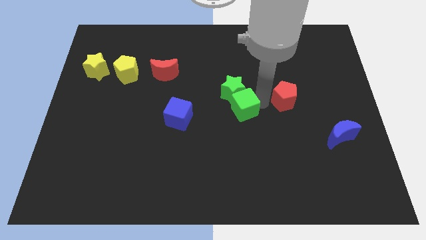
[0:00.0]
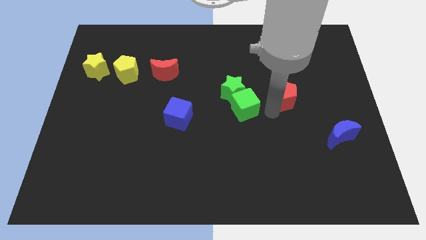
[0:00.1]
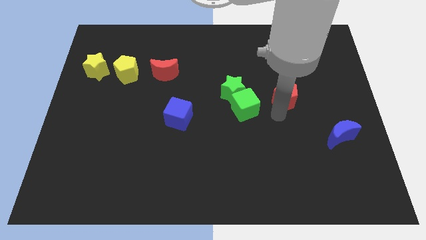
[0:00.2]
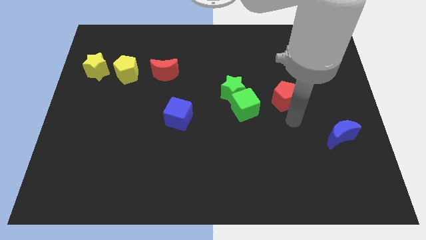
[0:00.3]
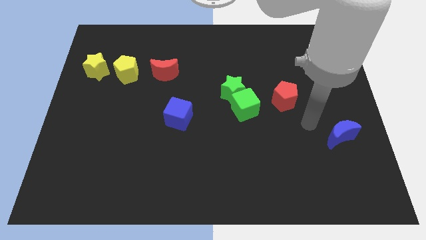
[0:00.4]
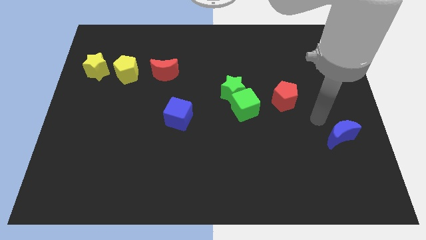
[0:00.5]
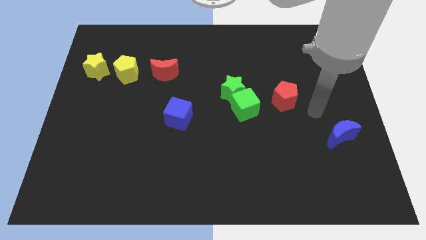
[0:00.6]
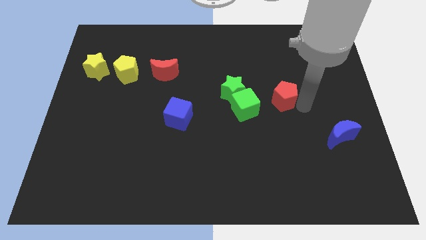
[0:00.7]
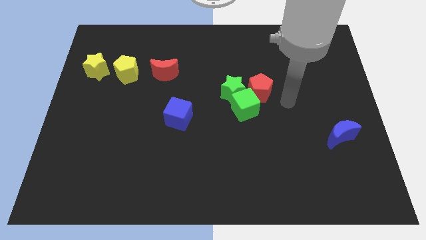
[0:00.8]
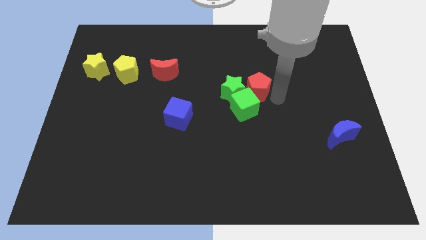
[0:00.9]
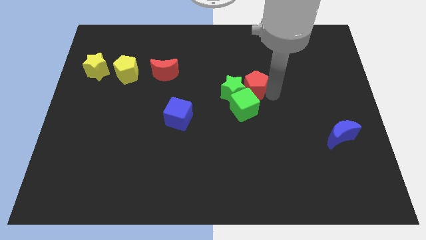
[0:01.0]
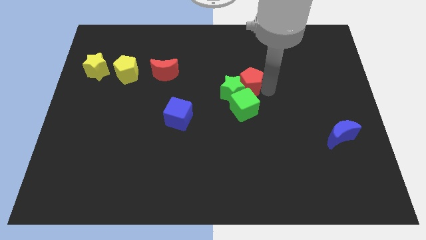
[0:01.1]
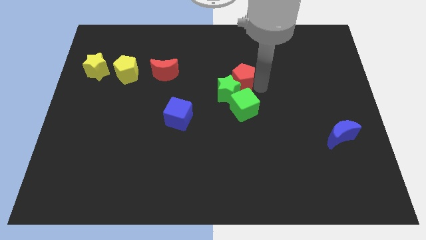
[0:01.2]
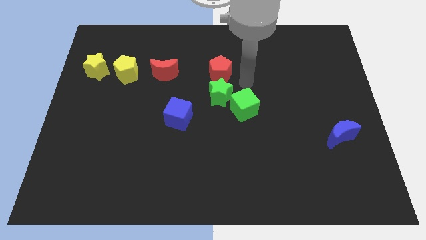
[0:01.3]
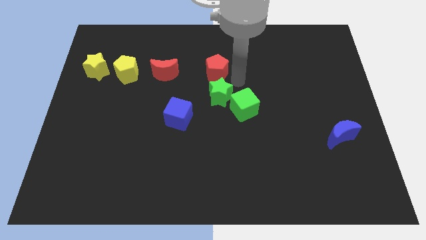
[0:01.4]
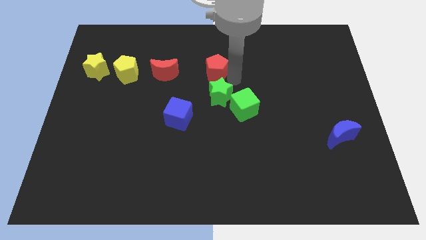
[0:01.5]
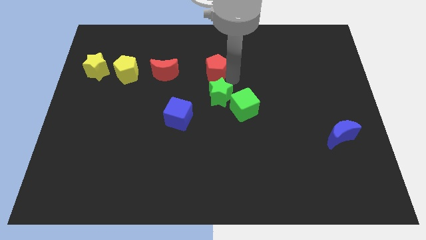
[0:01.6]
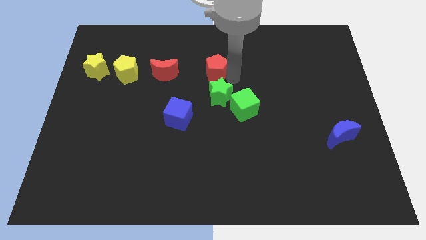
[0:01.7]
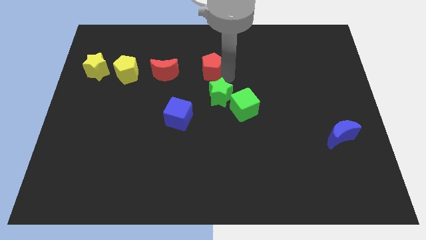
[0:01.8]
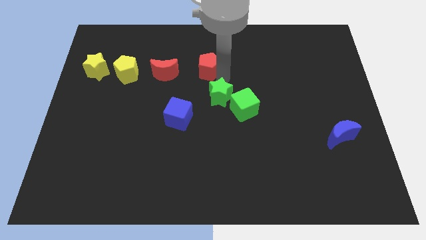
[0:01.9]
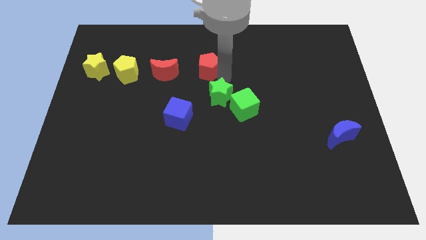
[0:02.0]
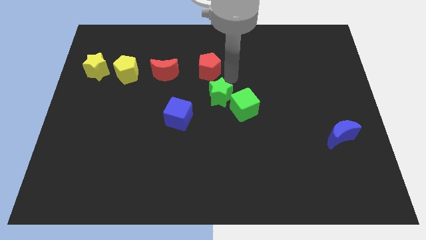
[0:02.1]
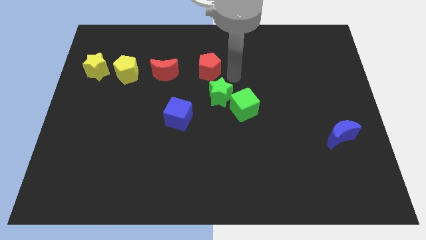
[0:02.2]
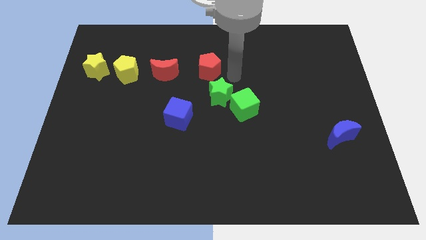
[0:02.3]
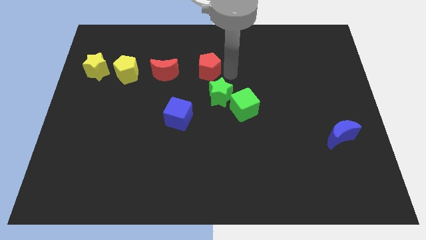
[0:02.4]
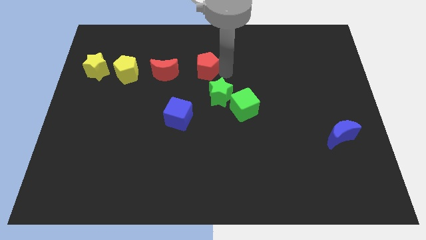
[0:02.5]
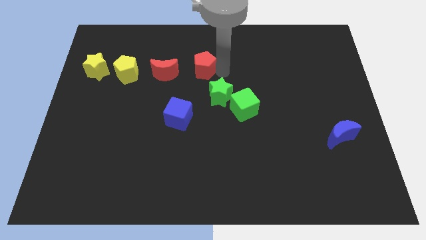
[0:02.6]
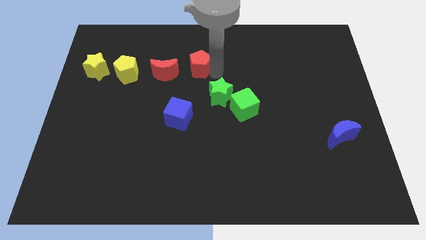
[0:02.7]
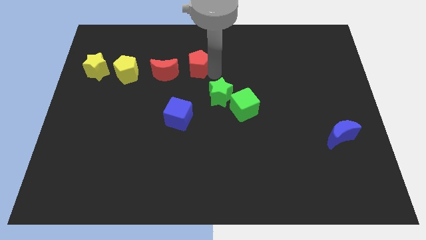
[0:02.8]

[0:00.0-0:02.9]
place the red pentagon right to the red moon

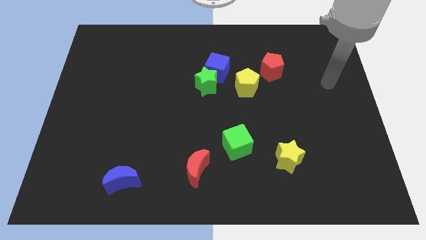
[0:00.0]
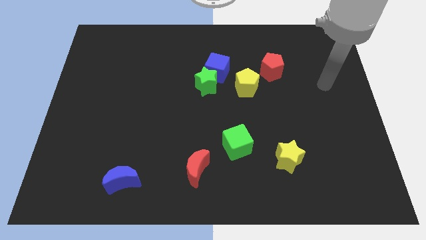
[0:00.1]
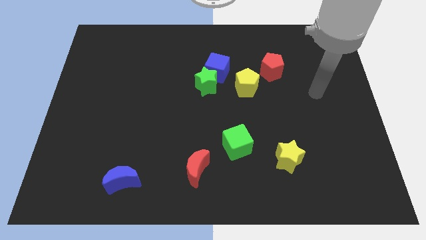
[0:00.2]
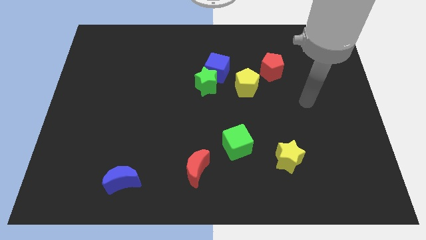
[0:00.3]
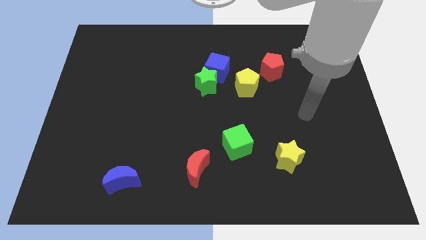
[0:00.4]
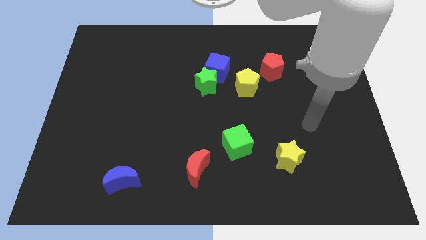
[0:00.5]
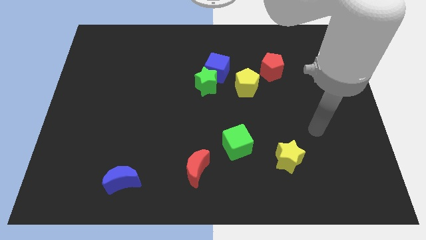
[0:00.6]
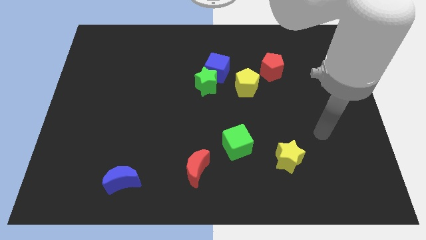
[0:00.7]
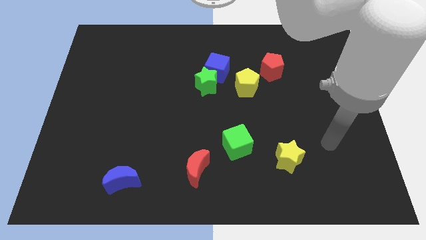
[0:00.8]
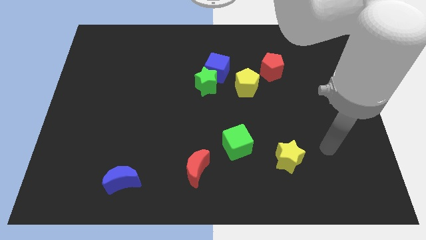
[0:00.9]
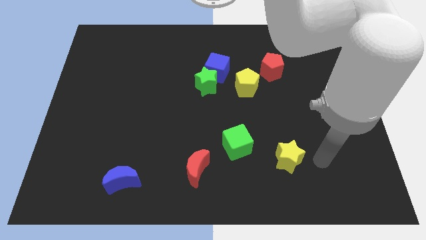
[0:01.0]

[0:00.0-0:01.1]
point your arm at the right side of the yellow star

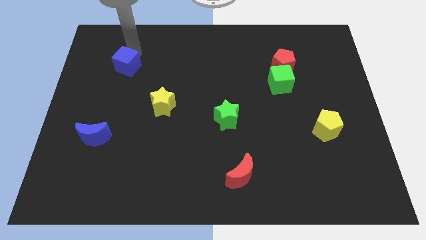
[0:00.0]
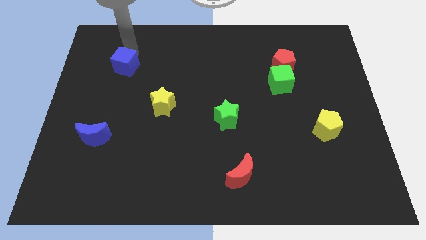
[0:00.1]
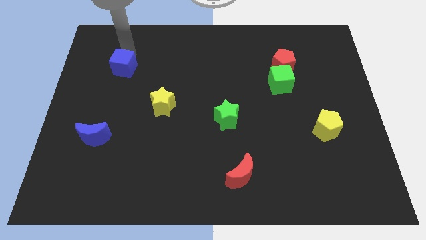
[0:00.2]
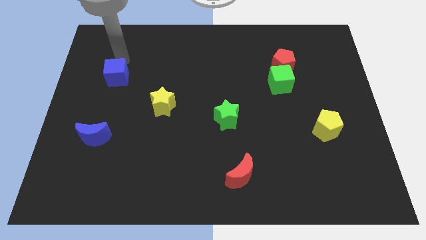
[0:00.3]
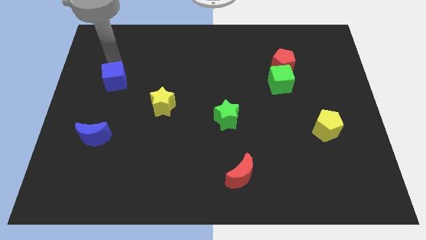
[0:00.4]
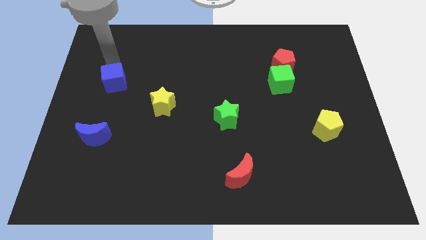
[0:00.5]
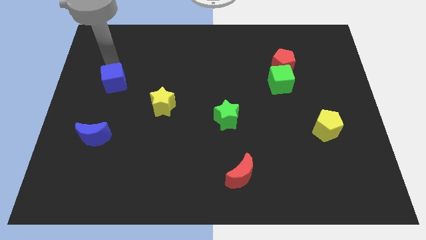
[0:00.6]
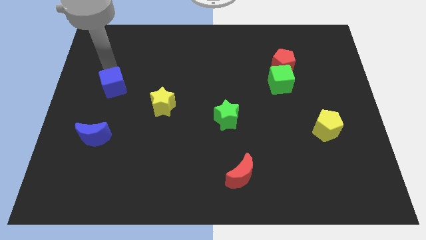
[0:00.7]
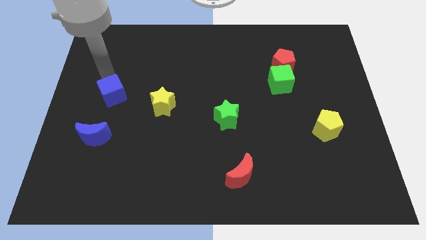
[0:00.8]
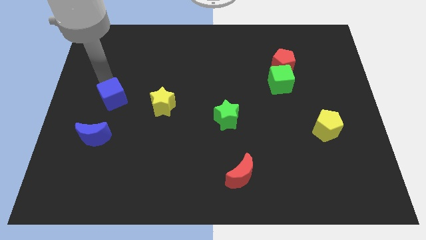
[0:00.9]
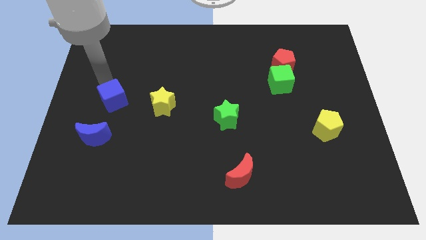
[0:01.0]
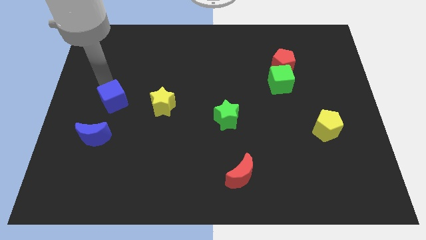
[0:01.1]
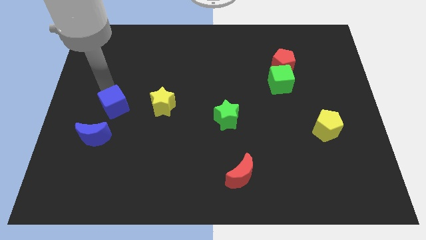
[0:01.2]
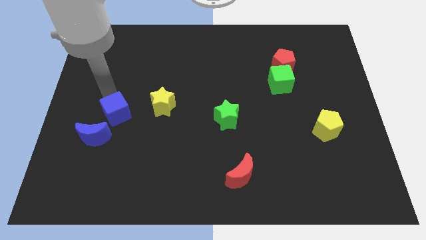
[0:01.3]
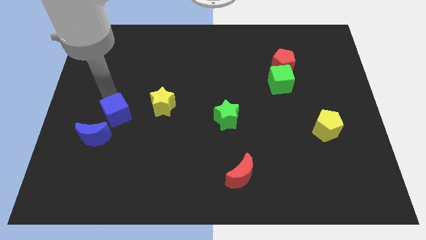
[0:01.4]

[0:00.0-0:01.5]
move the blue cube close to the blue moon

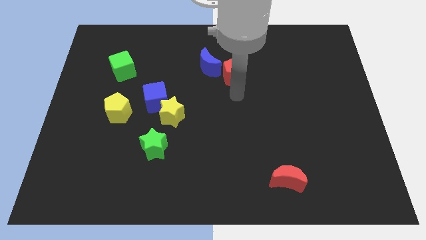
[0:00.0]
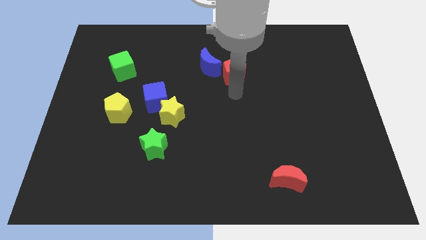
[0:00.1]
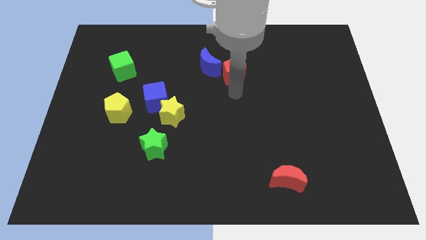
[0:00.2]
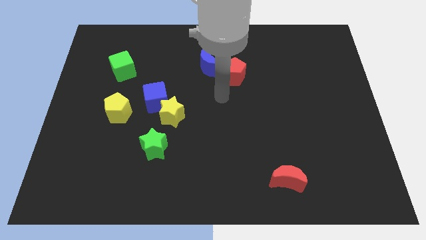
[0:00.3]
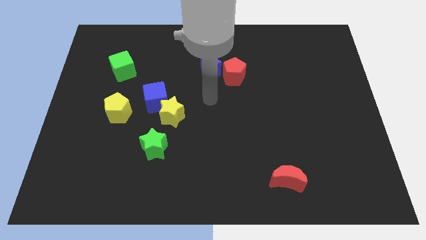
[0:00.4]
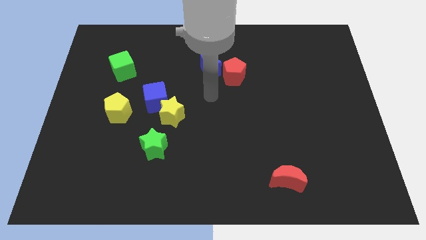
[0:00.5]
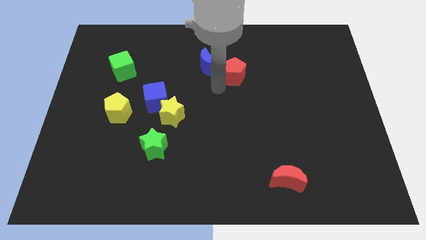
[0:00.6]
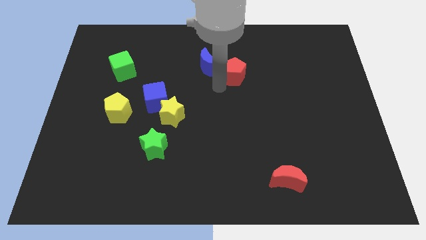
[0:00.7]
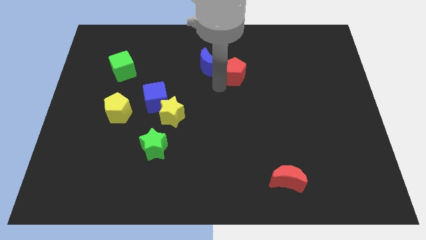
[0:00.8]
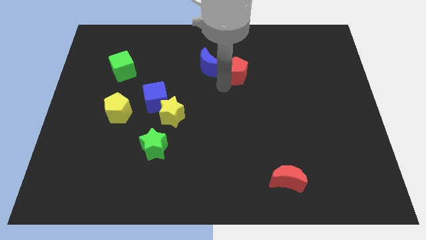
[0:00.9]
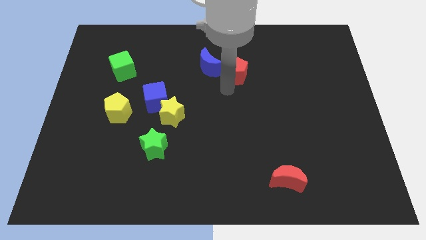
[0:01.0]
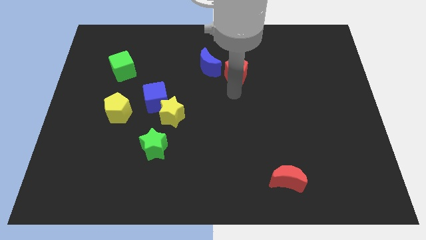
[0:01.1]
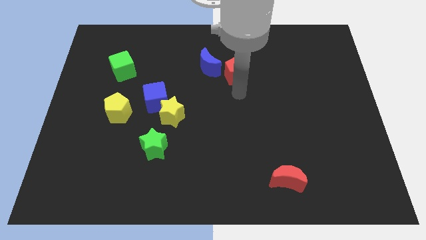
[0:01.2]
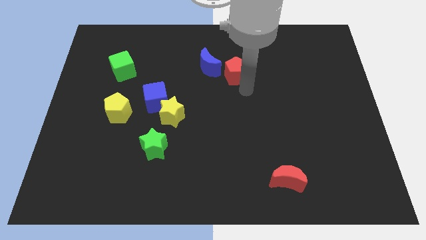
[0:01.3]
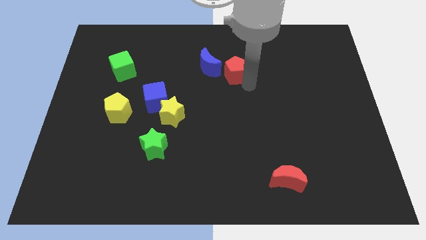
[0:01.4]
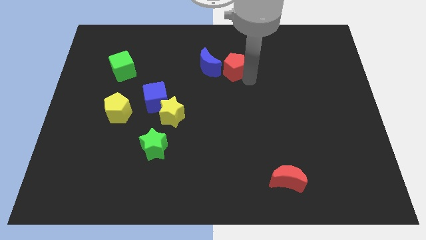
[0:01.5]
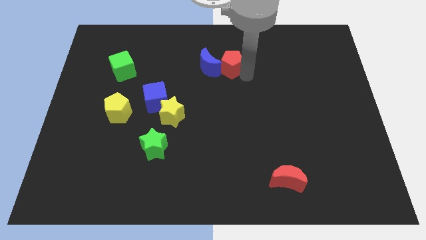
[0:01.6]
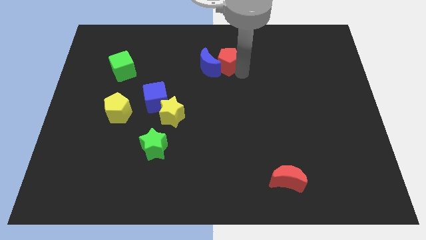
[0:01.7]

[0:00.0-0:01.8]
move the red pentagon to the right side of the blue crescent

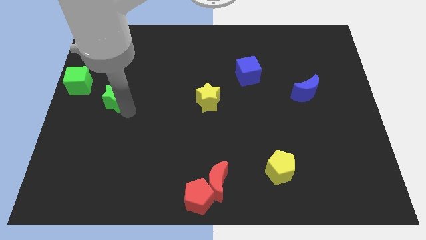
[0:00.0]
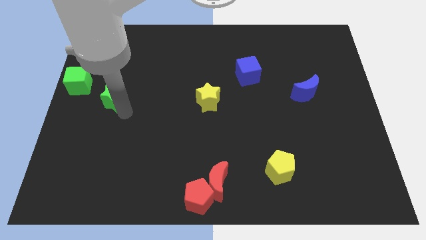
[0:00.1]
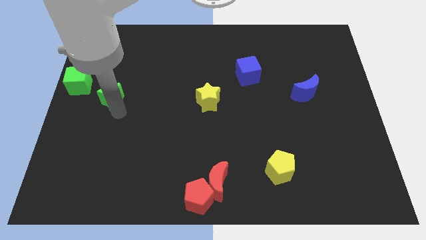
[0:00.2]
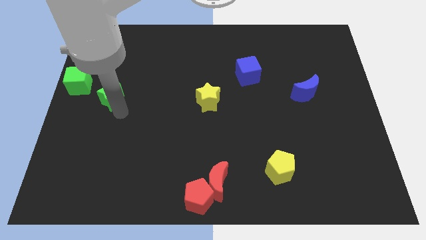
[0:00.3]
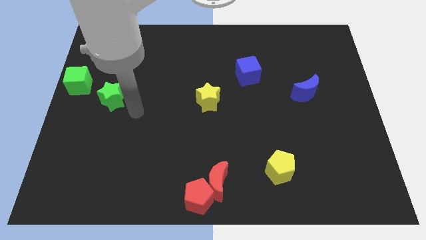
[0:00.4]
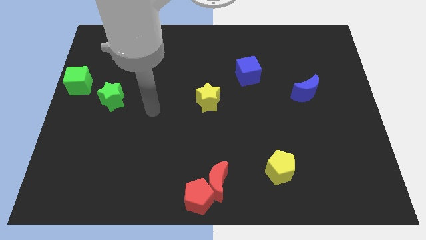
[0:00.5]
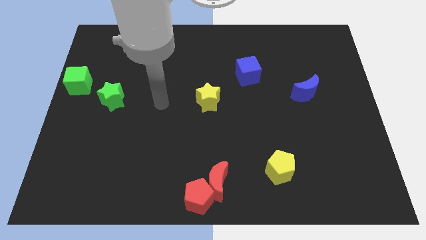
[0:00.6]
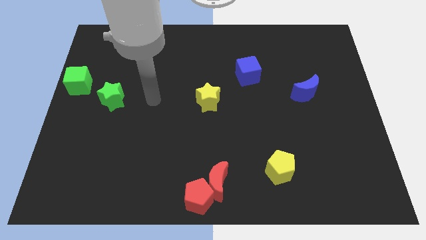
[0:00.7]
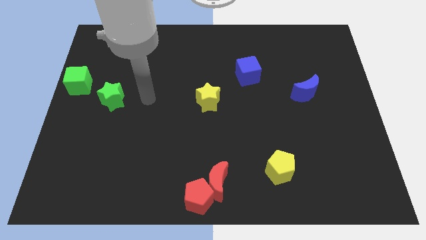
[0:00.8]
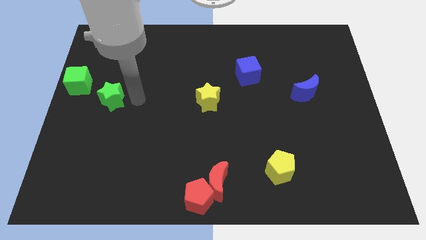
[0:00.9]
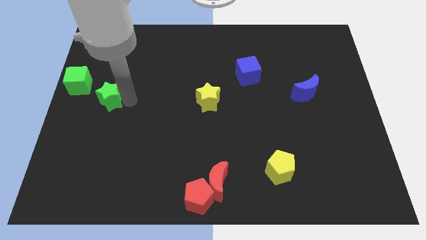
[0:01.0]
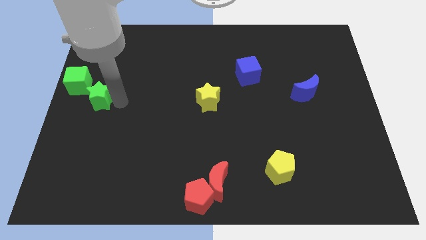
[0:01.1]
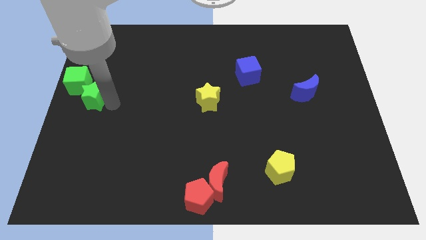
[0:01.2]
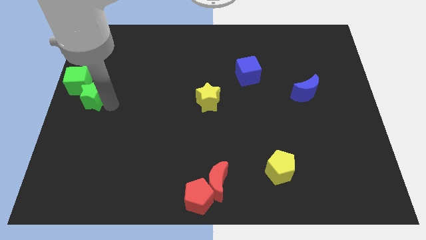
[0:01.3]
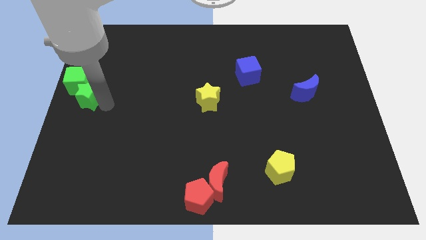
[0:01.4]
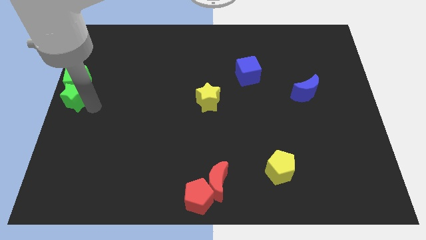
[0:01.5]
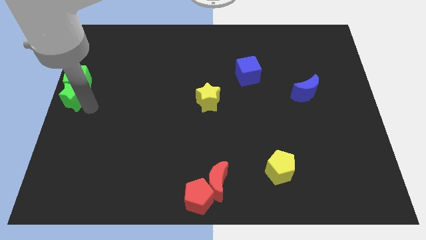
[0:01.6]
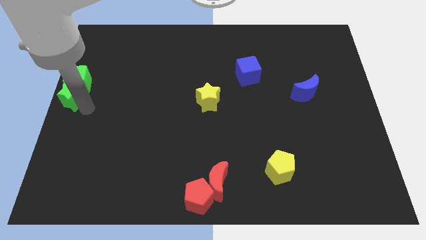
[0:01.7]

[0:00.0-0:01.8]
place green star below green cube
